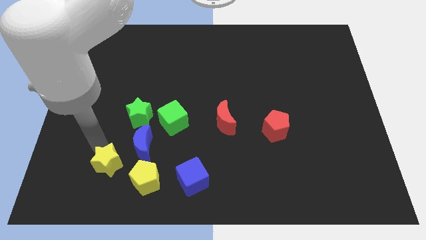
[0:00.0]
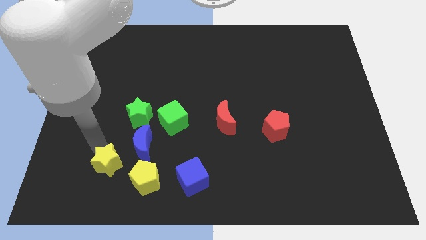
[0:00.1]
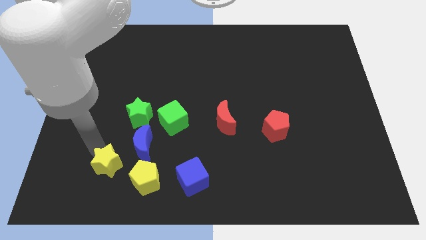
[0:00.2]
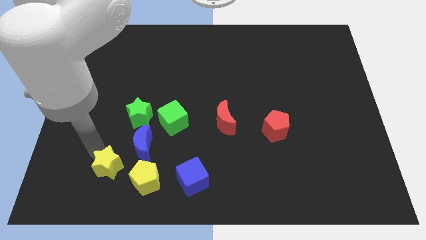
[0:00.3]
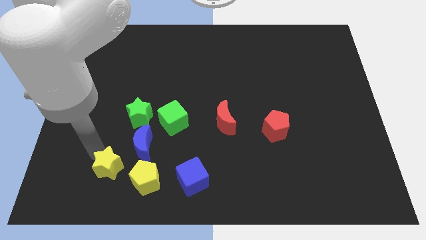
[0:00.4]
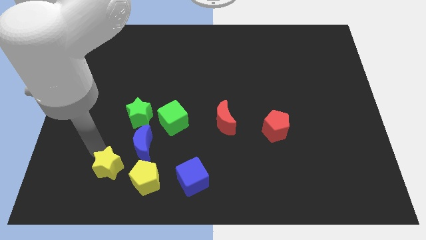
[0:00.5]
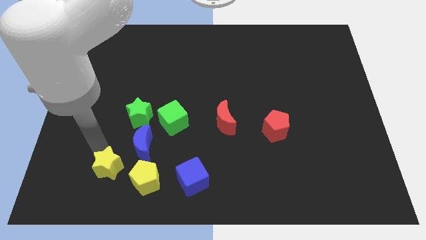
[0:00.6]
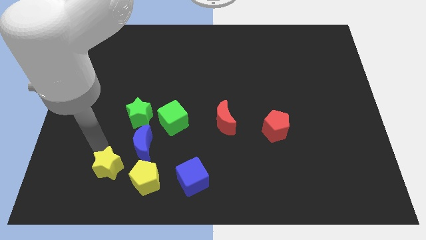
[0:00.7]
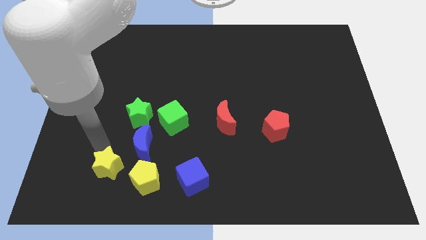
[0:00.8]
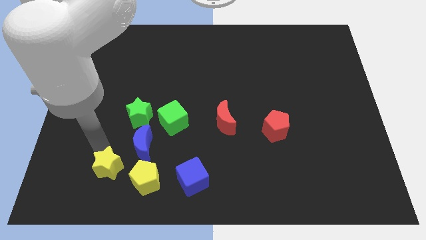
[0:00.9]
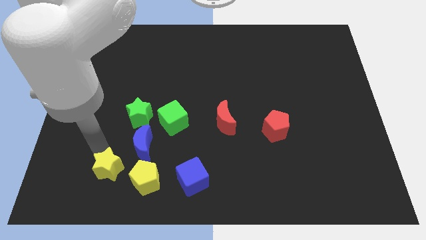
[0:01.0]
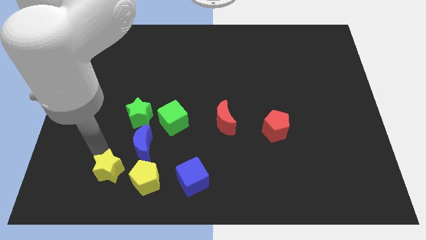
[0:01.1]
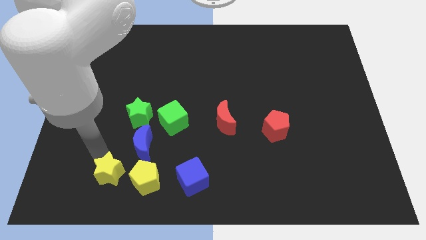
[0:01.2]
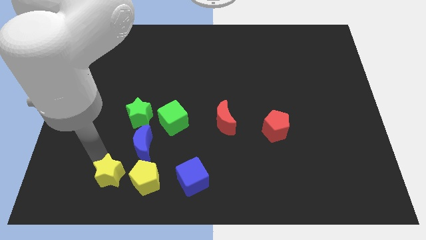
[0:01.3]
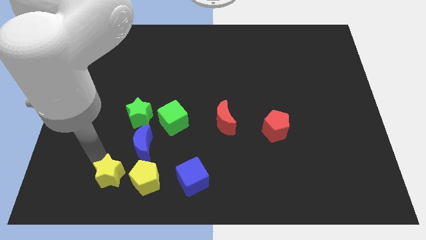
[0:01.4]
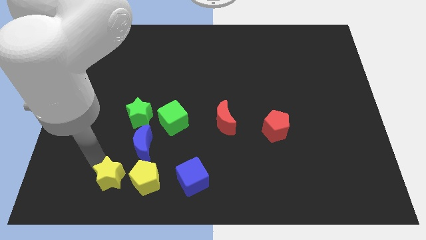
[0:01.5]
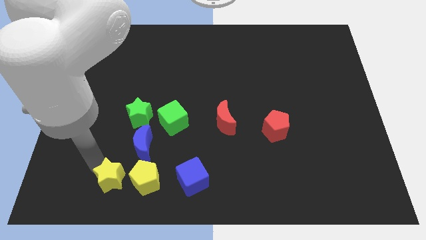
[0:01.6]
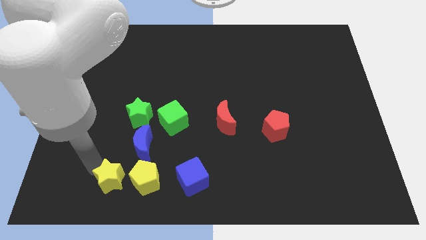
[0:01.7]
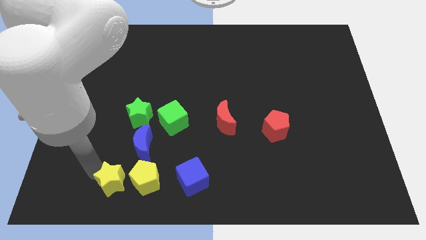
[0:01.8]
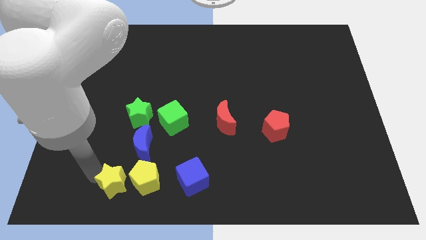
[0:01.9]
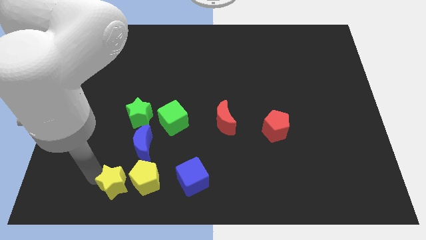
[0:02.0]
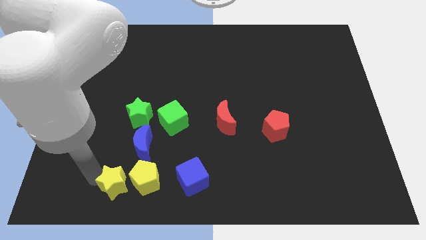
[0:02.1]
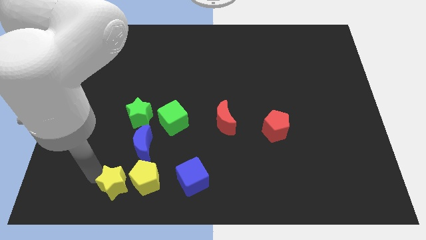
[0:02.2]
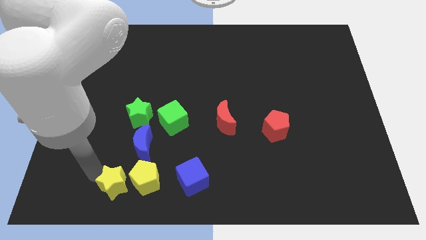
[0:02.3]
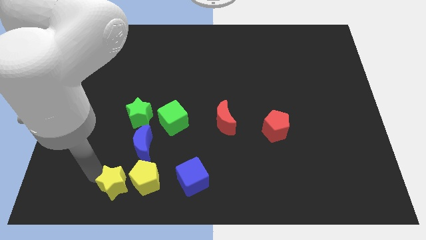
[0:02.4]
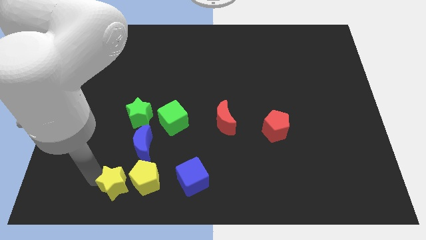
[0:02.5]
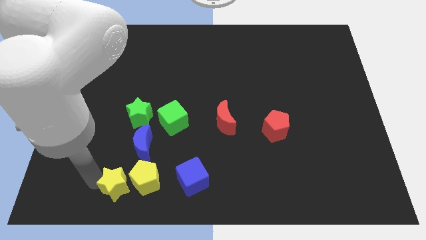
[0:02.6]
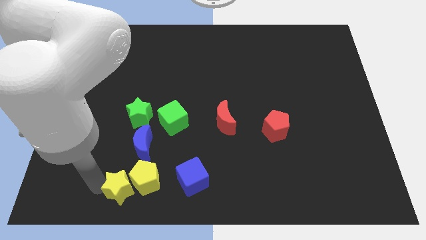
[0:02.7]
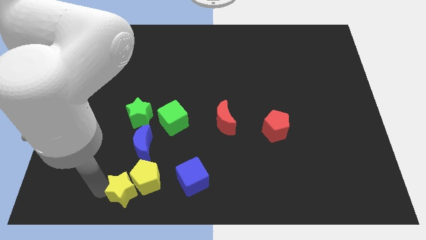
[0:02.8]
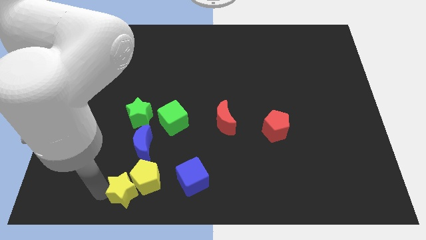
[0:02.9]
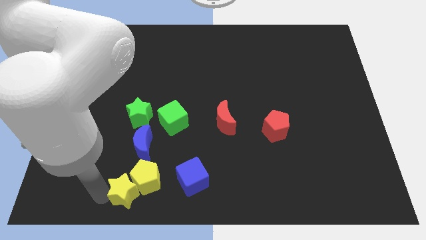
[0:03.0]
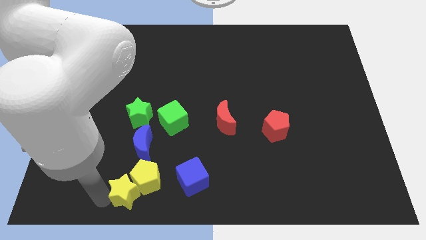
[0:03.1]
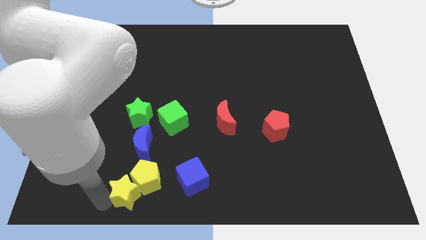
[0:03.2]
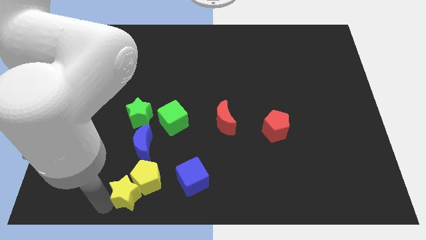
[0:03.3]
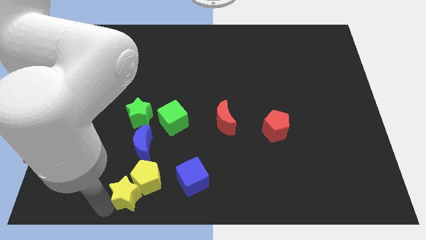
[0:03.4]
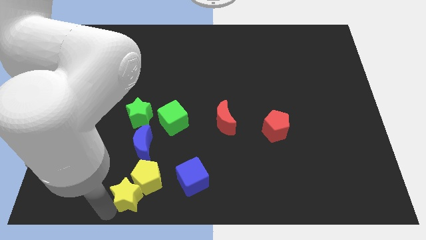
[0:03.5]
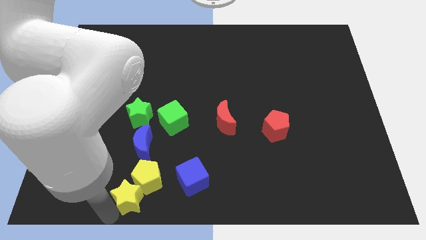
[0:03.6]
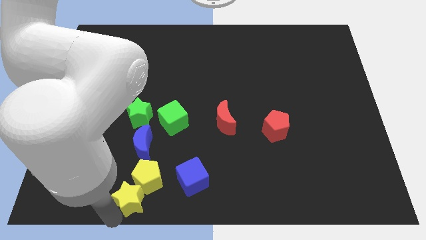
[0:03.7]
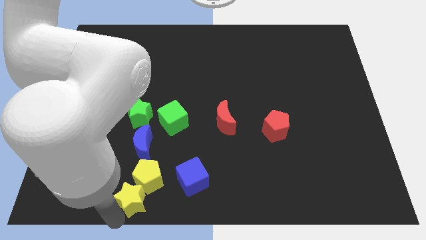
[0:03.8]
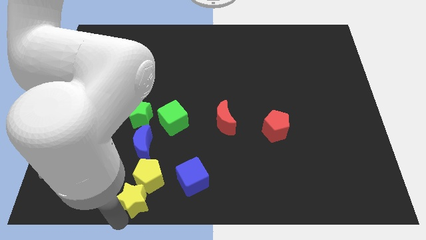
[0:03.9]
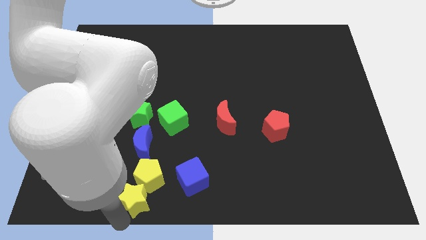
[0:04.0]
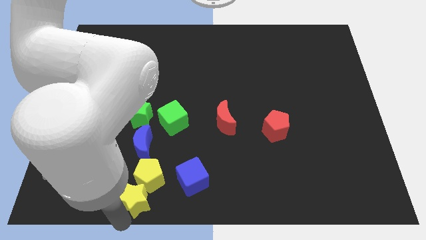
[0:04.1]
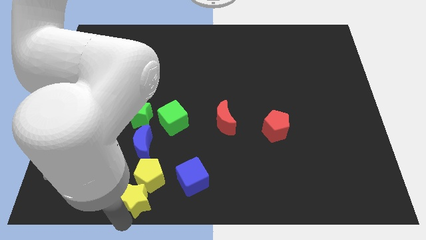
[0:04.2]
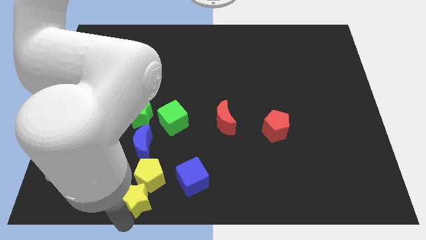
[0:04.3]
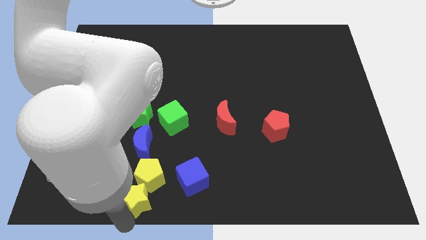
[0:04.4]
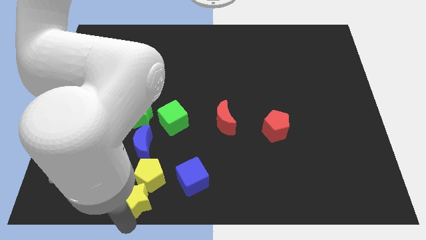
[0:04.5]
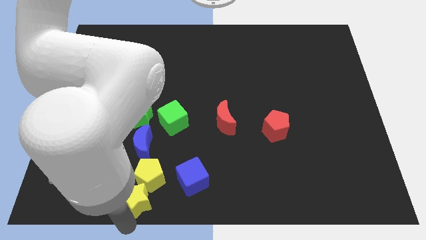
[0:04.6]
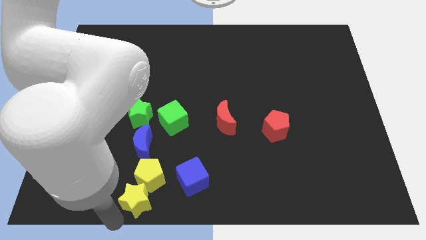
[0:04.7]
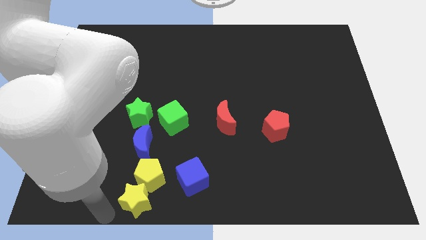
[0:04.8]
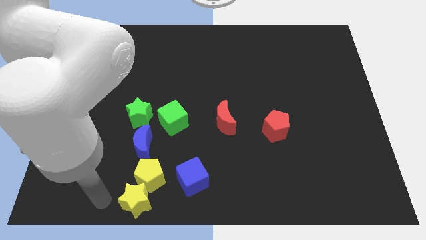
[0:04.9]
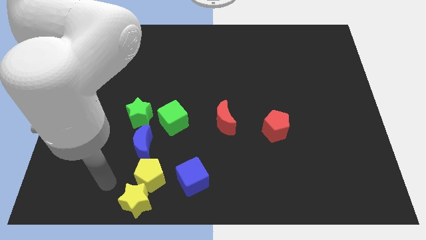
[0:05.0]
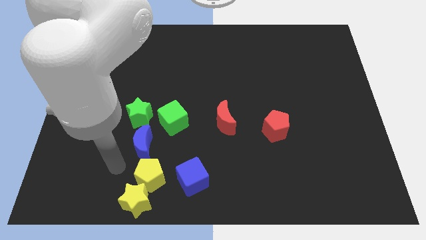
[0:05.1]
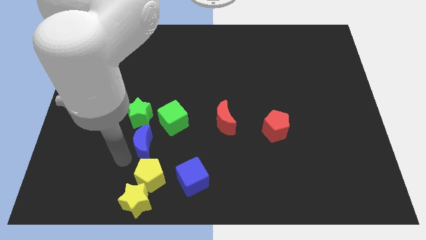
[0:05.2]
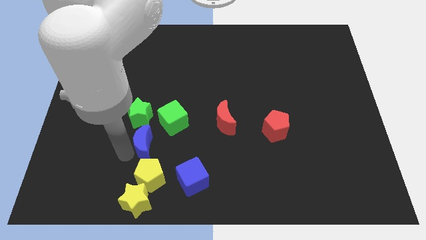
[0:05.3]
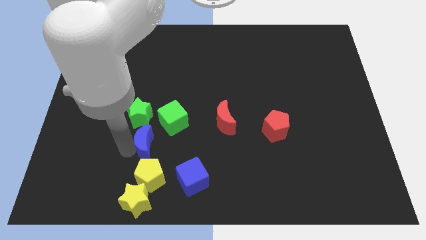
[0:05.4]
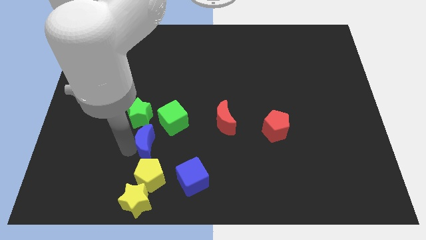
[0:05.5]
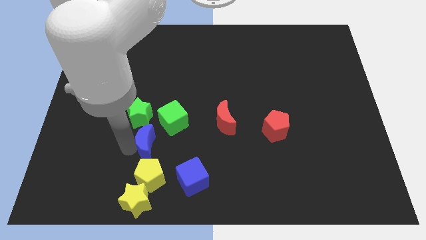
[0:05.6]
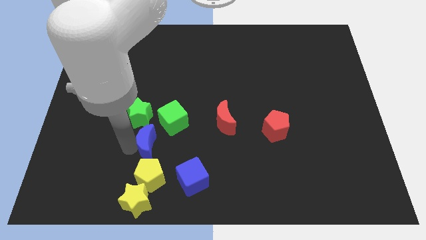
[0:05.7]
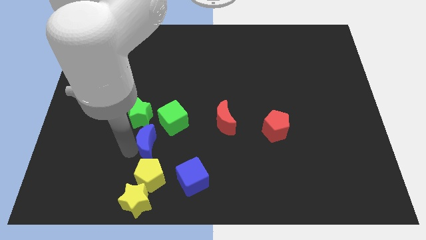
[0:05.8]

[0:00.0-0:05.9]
place yellow star below the yellow pentagon

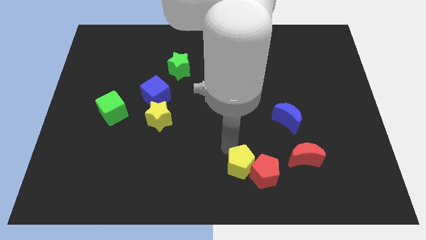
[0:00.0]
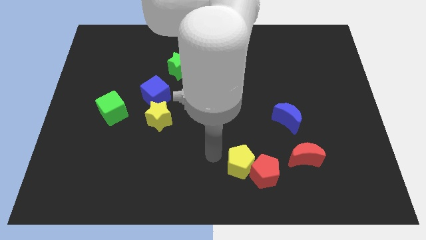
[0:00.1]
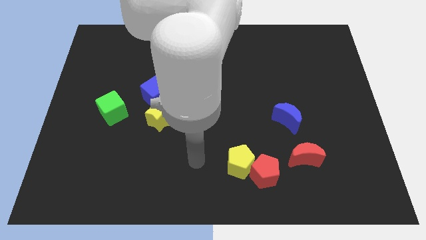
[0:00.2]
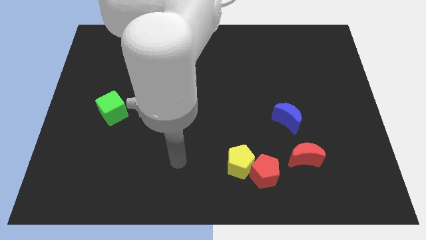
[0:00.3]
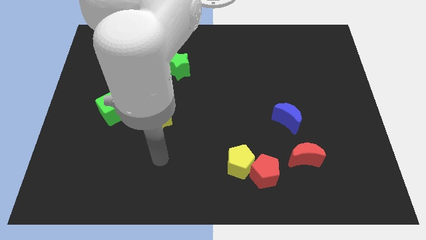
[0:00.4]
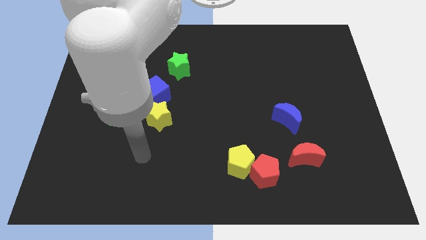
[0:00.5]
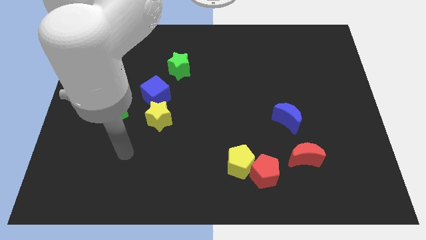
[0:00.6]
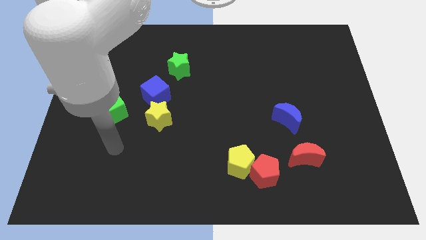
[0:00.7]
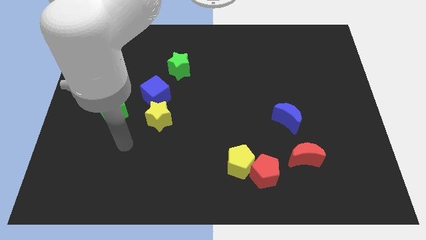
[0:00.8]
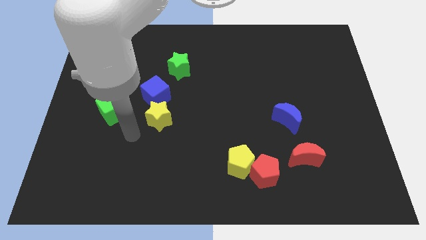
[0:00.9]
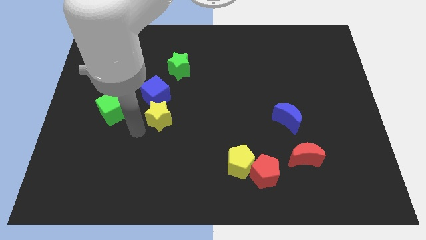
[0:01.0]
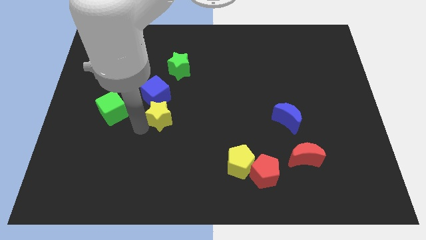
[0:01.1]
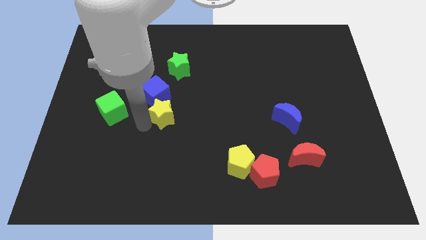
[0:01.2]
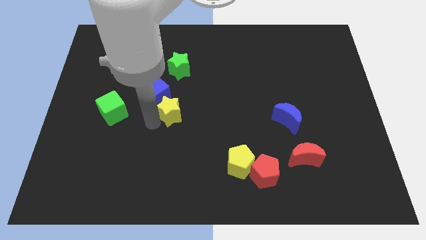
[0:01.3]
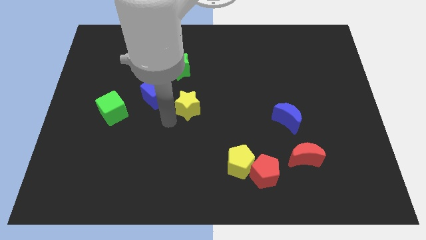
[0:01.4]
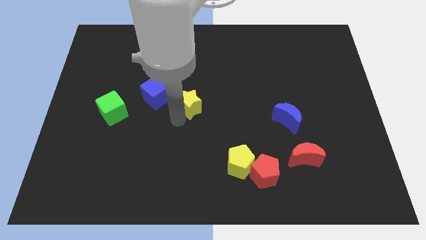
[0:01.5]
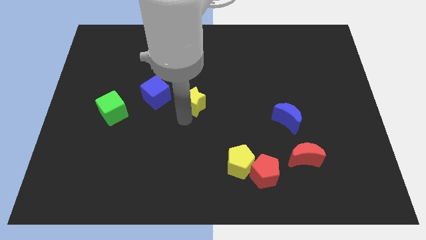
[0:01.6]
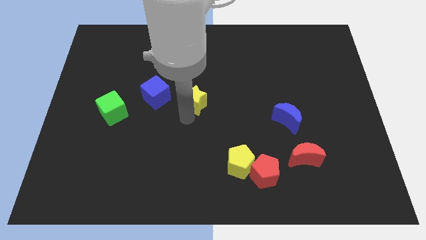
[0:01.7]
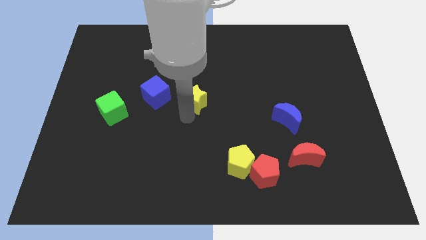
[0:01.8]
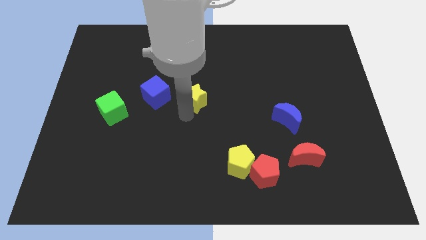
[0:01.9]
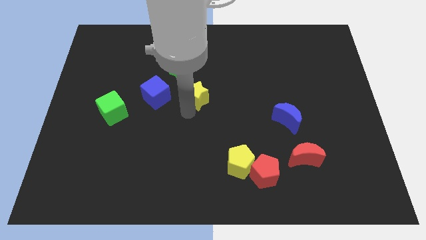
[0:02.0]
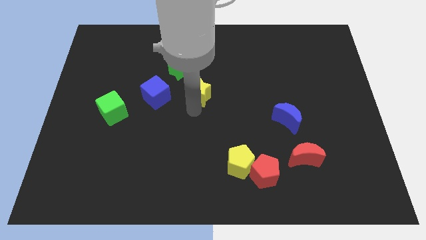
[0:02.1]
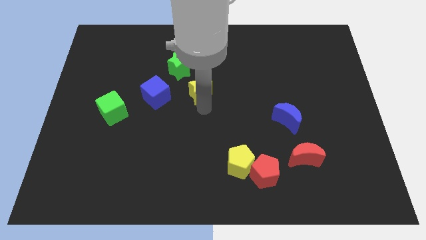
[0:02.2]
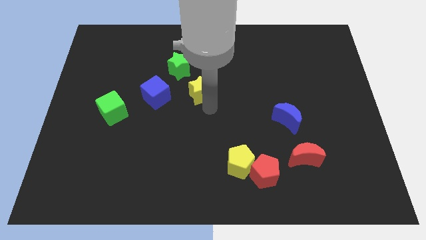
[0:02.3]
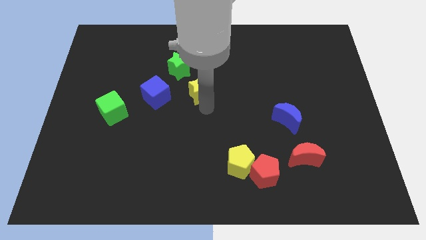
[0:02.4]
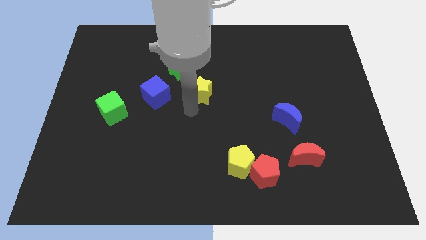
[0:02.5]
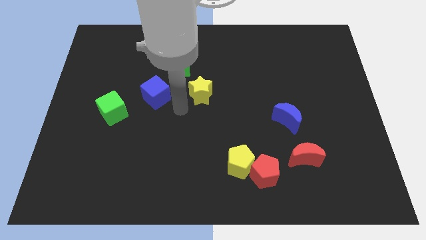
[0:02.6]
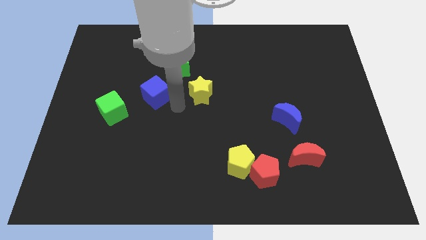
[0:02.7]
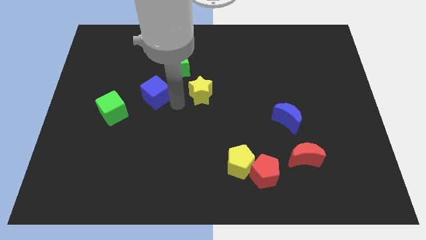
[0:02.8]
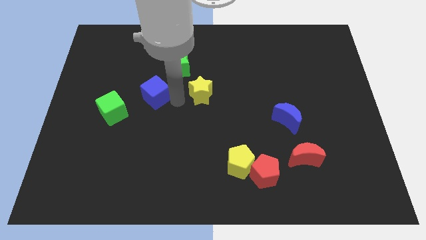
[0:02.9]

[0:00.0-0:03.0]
put the yellow star to the right of the blue cube
